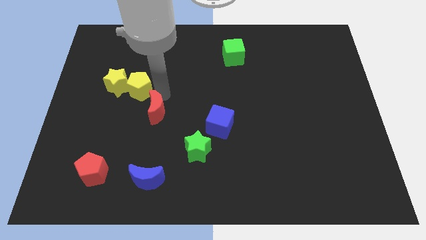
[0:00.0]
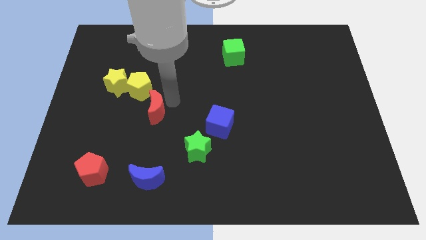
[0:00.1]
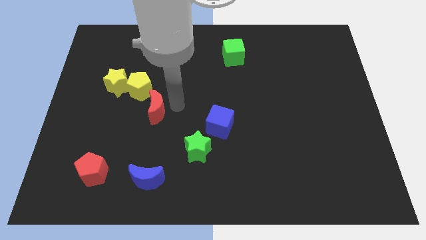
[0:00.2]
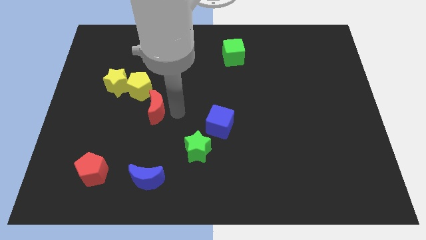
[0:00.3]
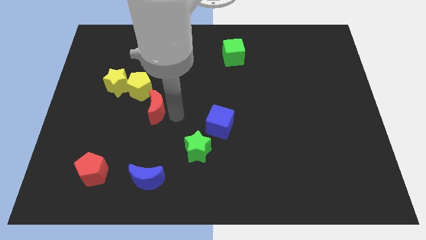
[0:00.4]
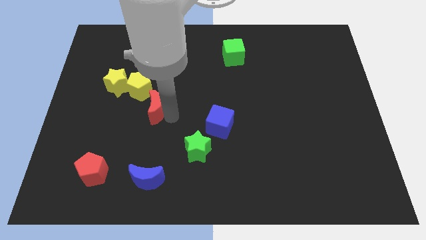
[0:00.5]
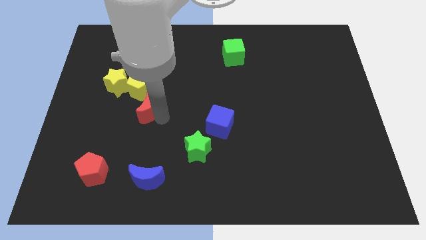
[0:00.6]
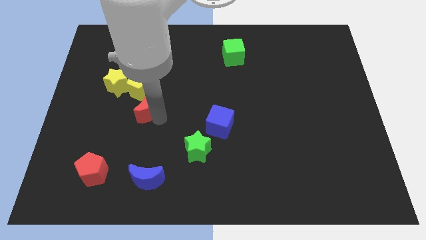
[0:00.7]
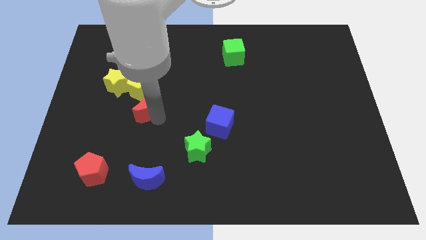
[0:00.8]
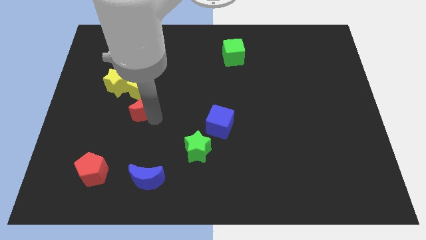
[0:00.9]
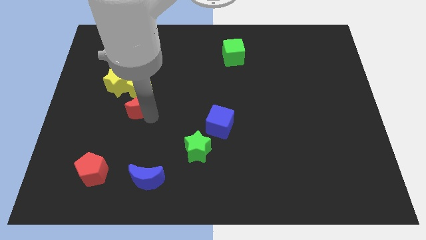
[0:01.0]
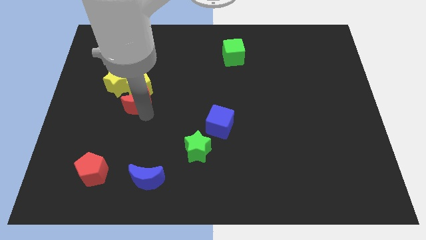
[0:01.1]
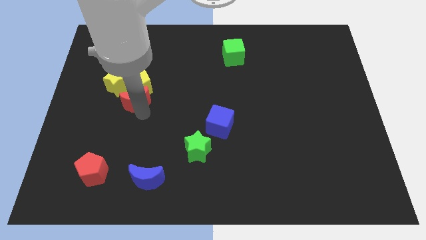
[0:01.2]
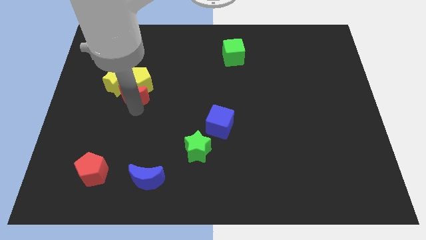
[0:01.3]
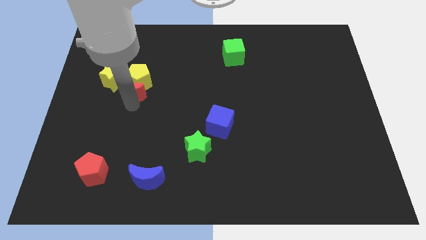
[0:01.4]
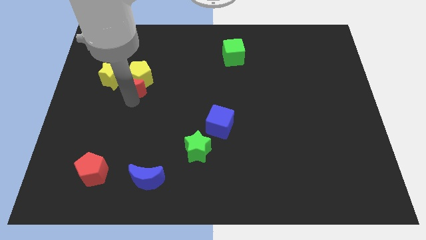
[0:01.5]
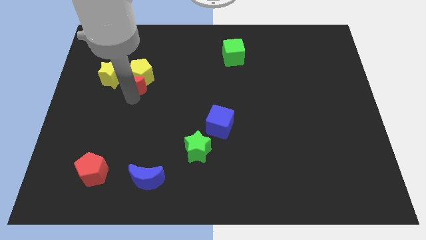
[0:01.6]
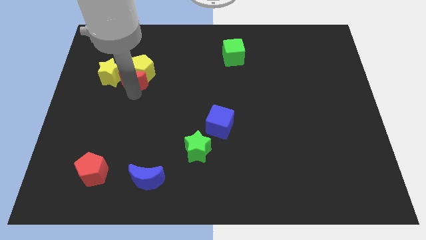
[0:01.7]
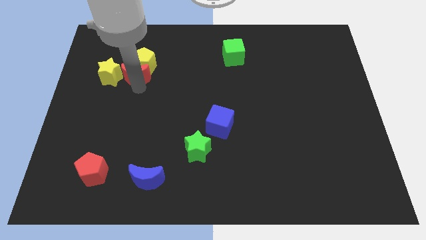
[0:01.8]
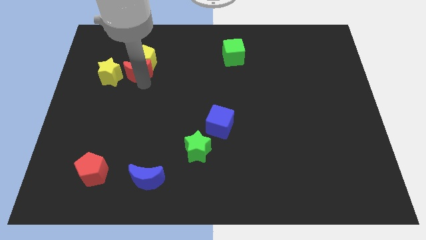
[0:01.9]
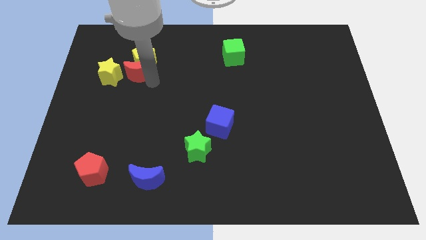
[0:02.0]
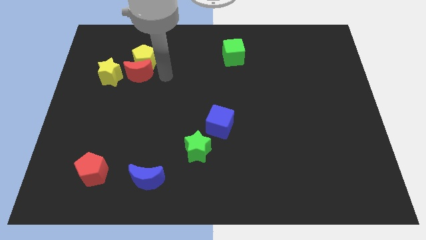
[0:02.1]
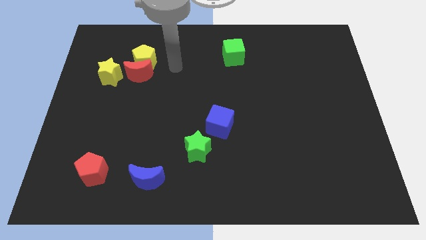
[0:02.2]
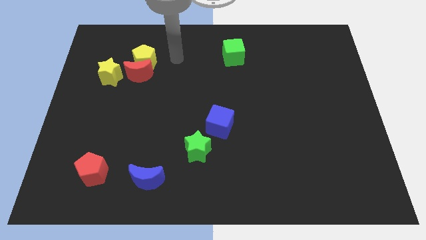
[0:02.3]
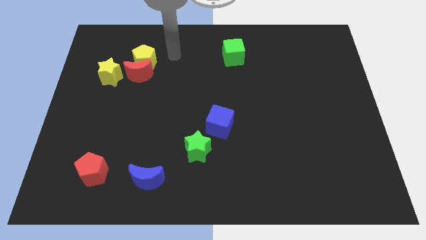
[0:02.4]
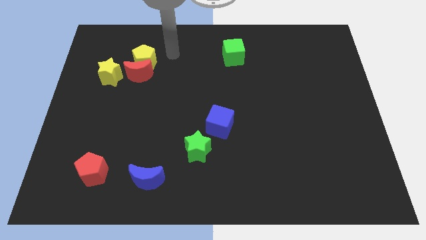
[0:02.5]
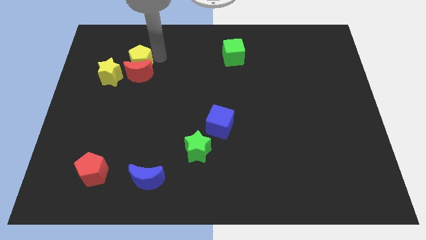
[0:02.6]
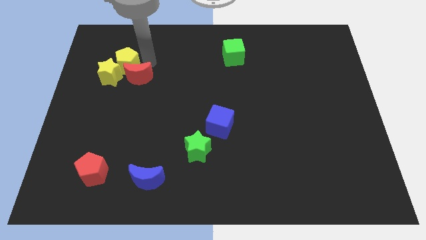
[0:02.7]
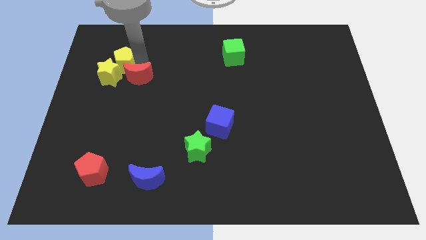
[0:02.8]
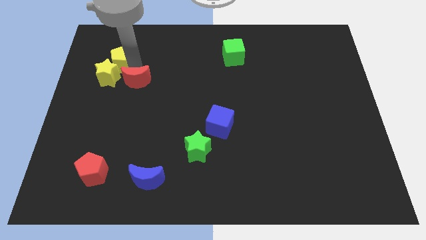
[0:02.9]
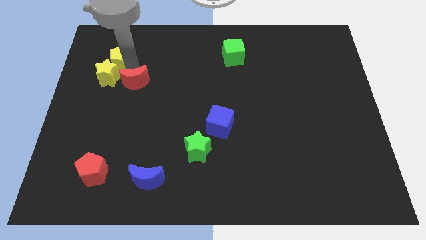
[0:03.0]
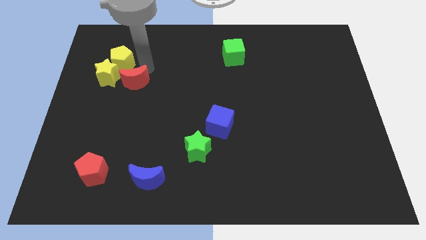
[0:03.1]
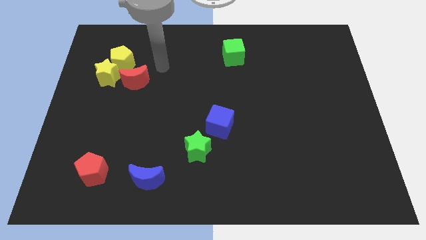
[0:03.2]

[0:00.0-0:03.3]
drag the red moon and yellow pentagon towards top side

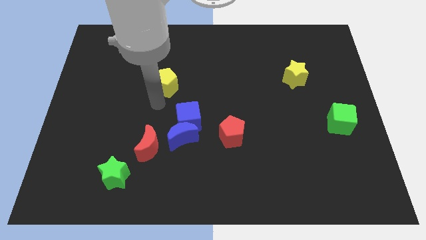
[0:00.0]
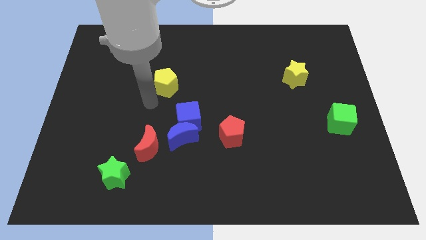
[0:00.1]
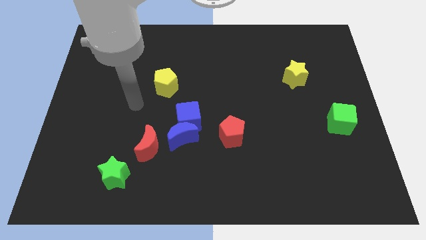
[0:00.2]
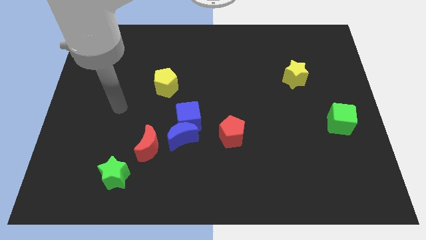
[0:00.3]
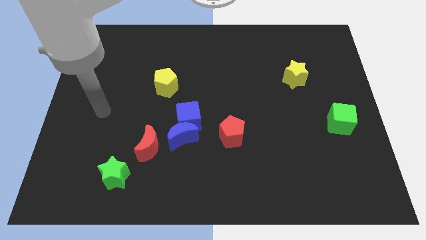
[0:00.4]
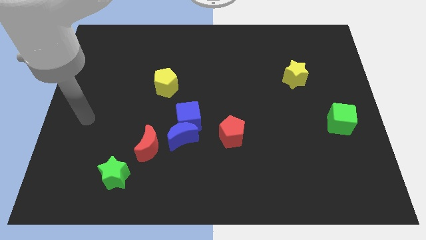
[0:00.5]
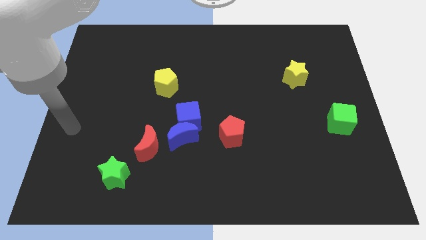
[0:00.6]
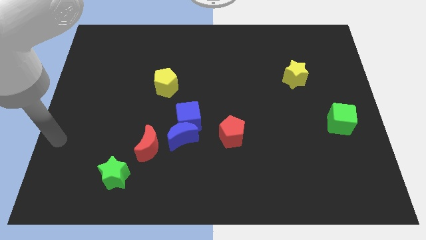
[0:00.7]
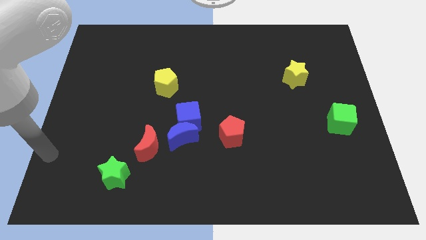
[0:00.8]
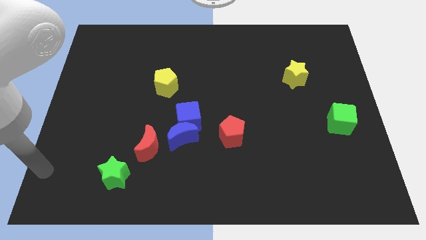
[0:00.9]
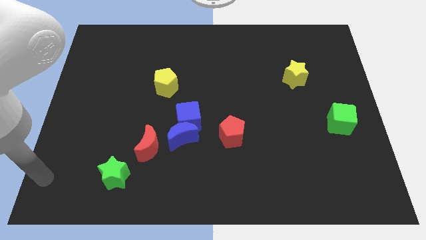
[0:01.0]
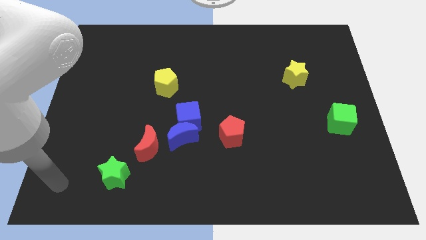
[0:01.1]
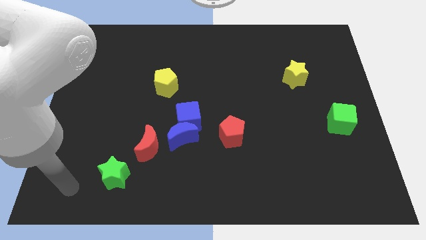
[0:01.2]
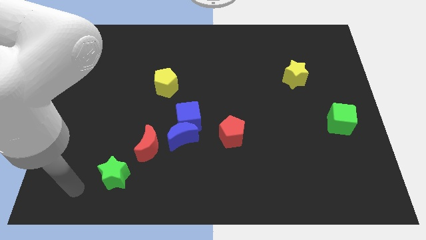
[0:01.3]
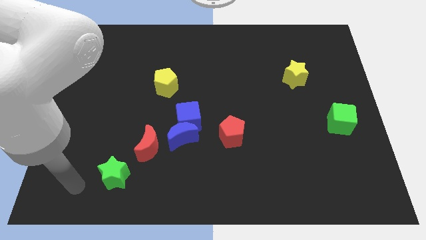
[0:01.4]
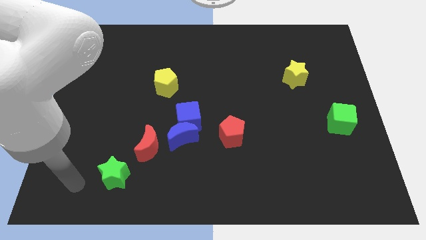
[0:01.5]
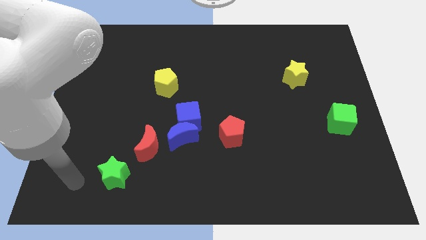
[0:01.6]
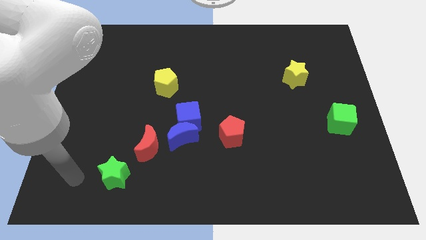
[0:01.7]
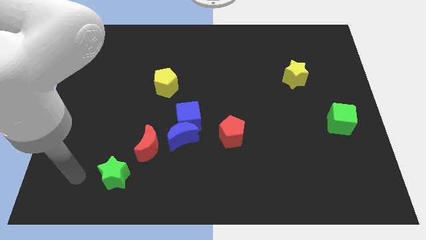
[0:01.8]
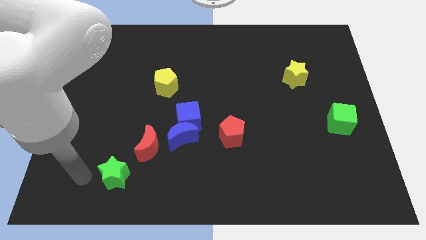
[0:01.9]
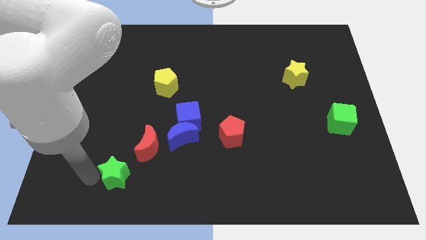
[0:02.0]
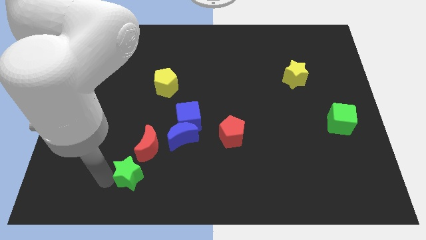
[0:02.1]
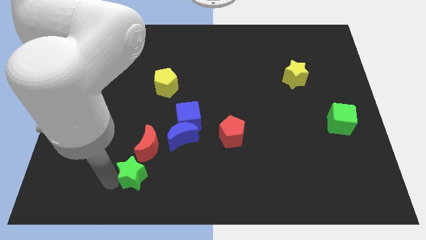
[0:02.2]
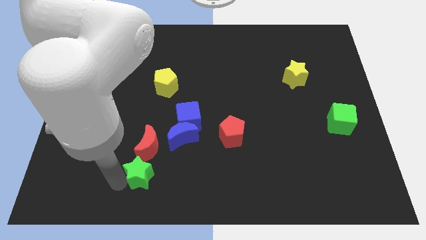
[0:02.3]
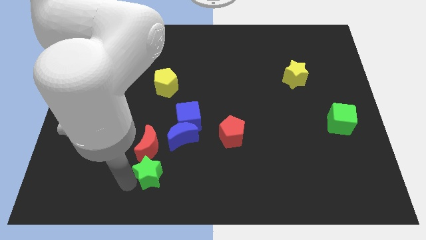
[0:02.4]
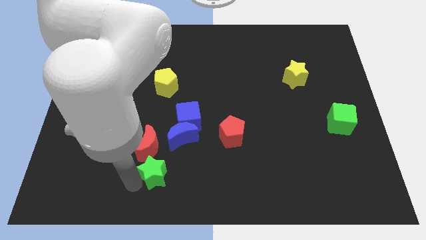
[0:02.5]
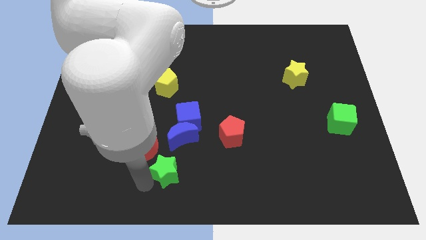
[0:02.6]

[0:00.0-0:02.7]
move the green star to the bottom of the red crescent

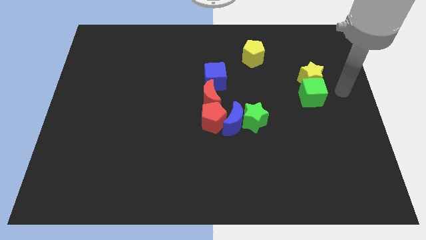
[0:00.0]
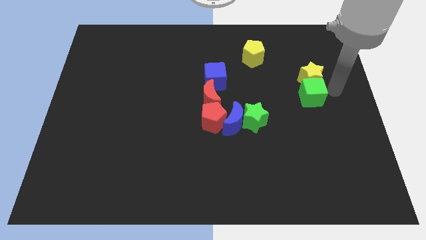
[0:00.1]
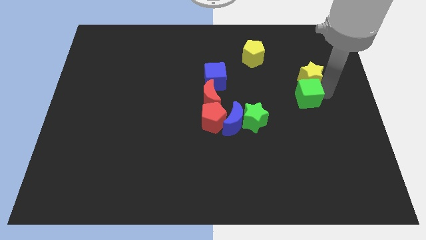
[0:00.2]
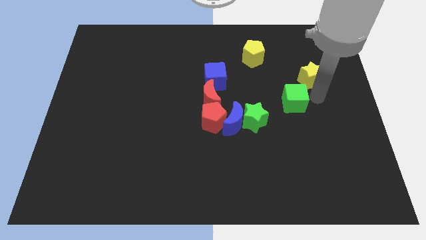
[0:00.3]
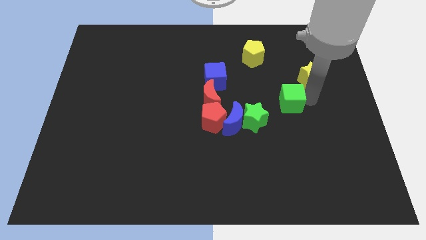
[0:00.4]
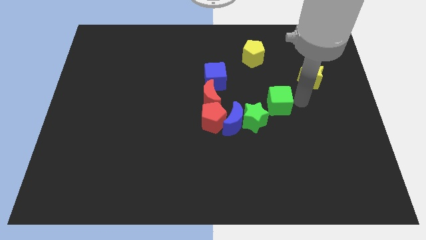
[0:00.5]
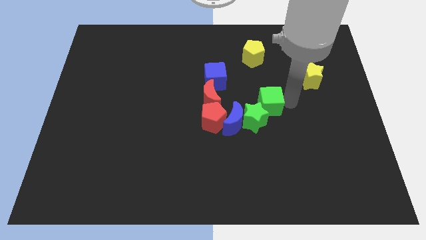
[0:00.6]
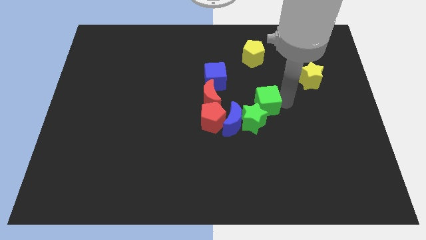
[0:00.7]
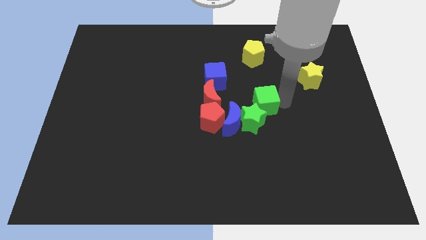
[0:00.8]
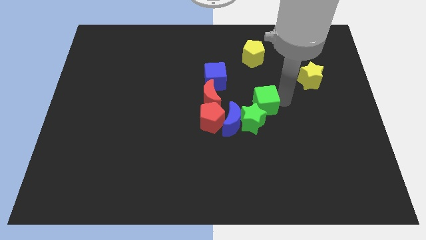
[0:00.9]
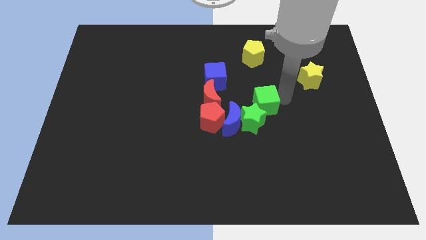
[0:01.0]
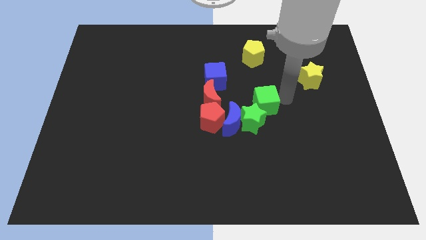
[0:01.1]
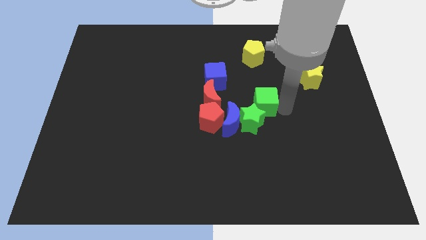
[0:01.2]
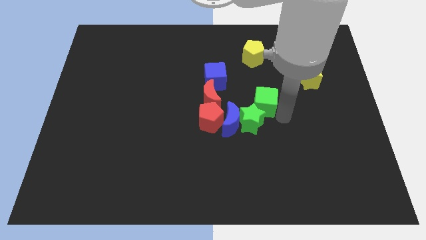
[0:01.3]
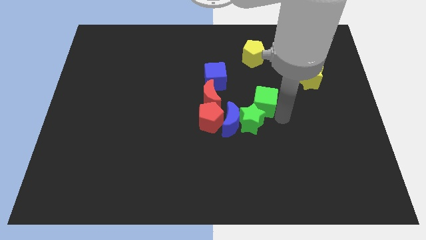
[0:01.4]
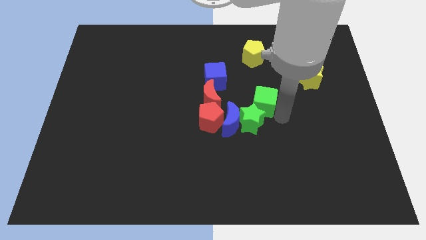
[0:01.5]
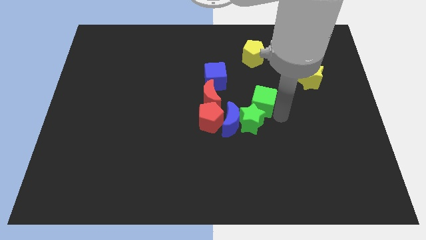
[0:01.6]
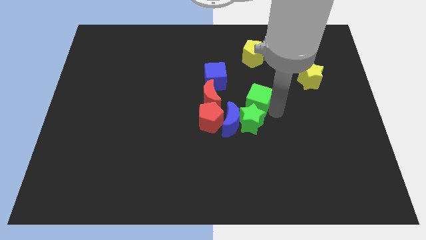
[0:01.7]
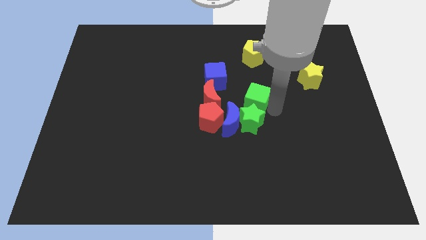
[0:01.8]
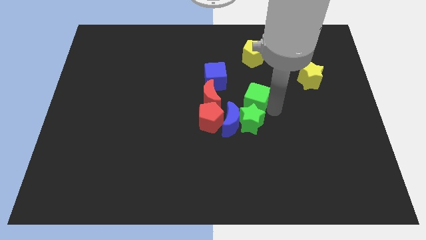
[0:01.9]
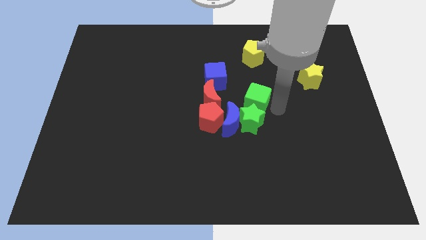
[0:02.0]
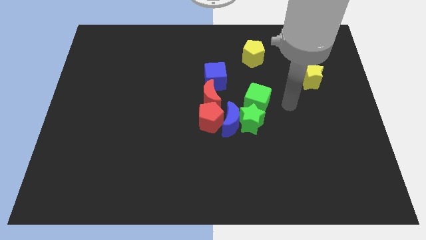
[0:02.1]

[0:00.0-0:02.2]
move the green cube into the green star

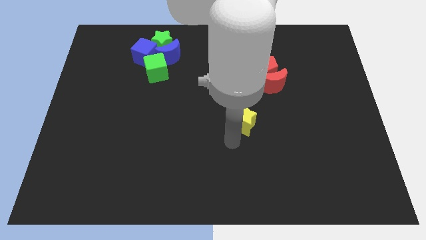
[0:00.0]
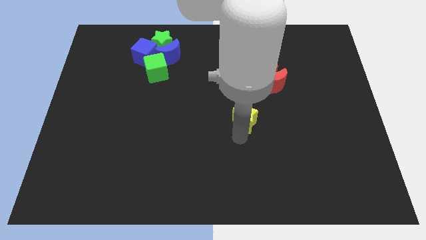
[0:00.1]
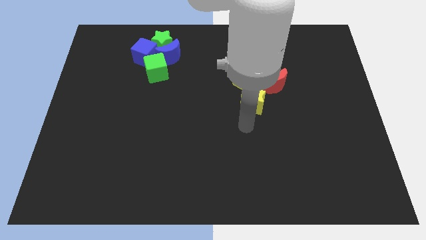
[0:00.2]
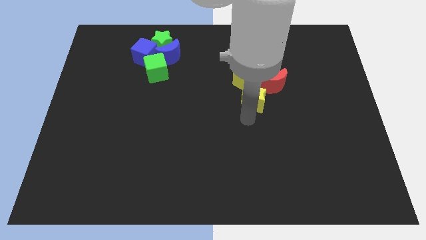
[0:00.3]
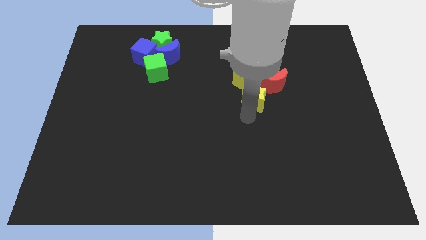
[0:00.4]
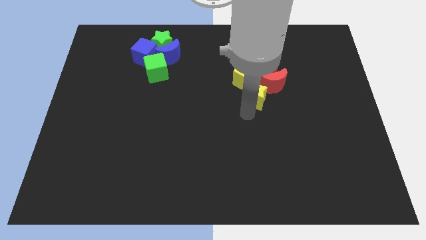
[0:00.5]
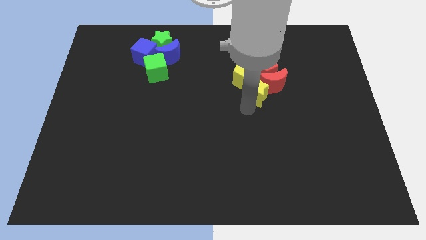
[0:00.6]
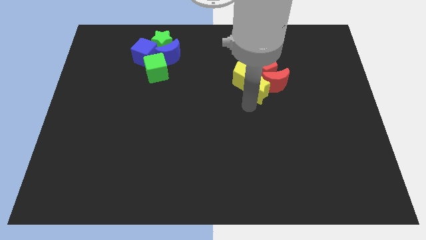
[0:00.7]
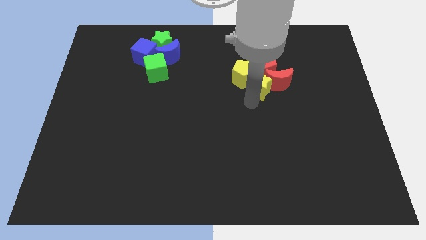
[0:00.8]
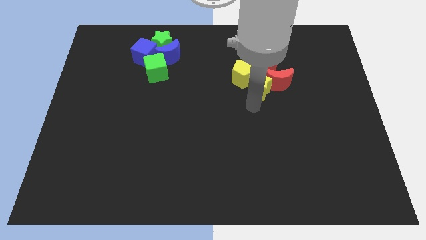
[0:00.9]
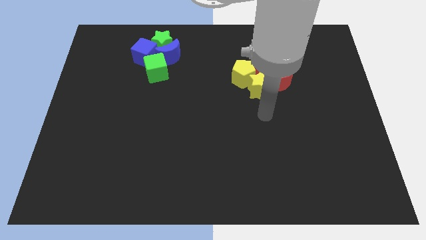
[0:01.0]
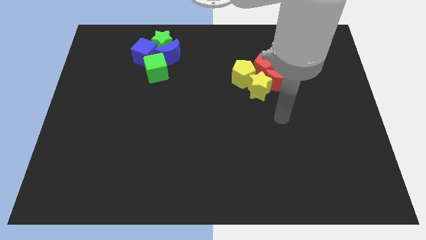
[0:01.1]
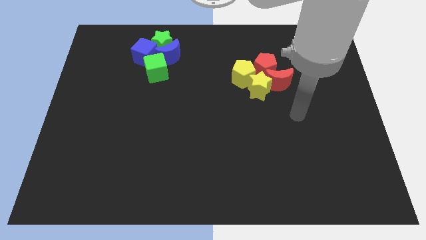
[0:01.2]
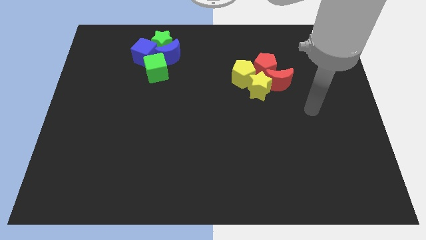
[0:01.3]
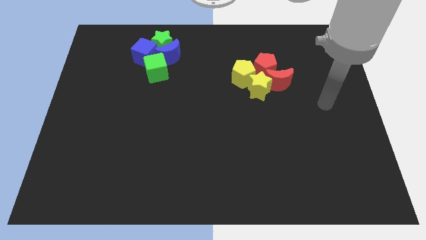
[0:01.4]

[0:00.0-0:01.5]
move the yellow star into the red moon
